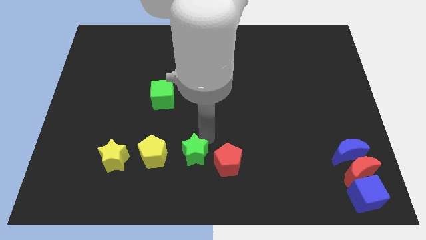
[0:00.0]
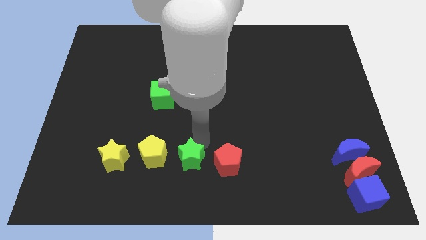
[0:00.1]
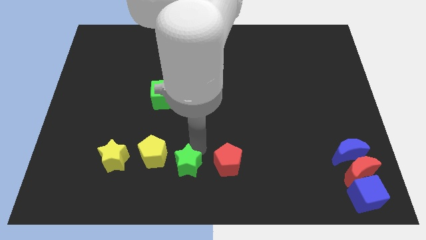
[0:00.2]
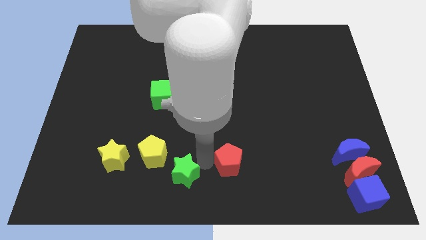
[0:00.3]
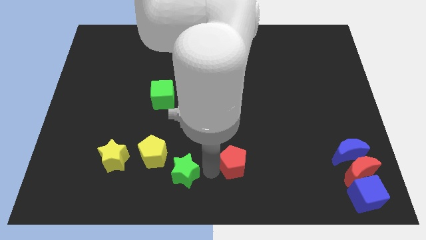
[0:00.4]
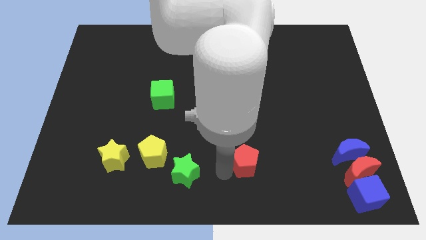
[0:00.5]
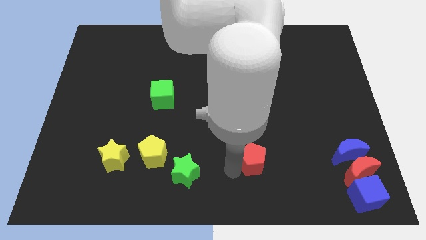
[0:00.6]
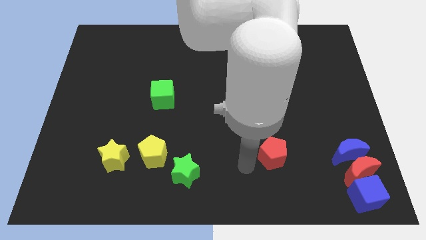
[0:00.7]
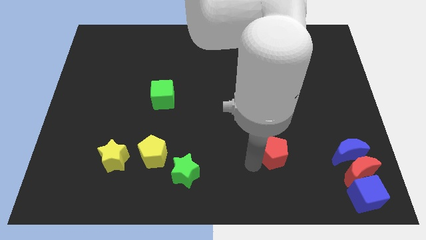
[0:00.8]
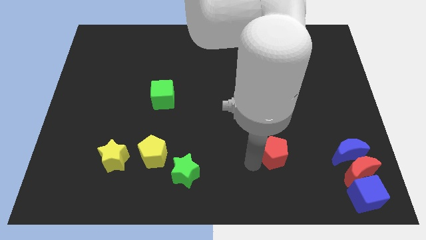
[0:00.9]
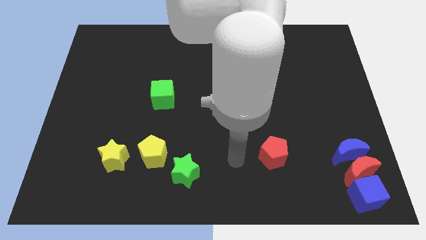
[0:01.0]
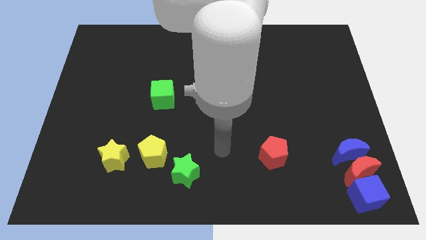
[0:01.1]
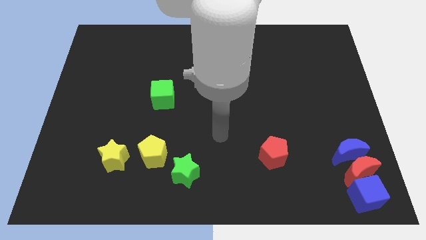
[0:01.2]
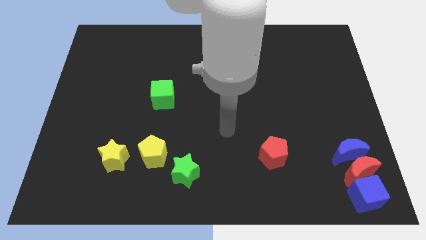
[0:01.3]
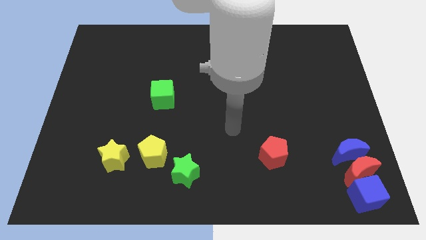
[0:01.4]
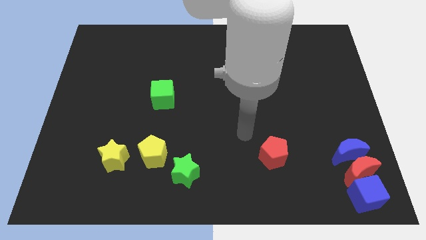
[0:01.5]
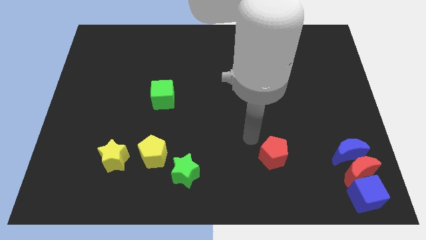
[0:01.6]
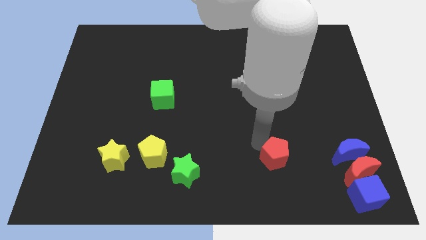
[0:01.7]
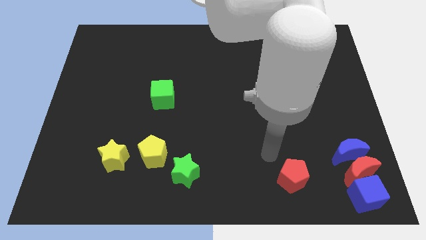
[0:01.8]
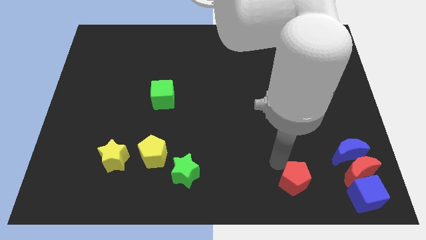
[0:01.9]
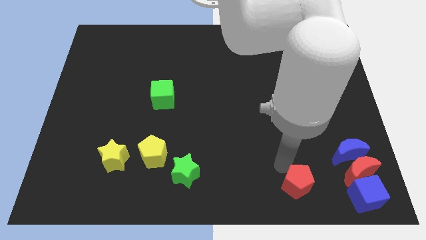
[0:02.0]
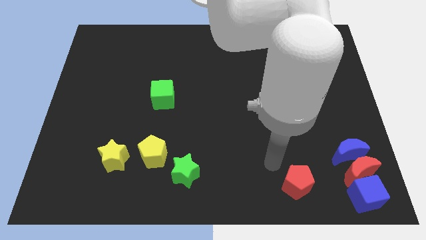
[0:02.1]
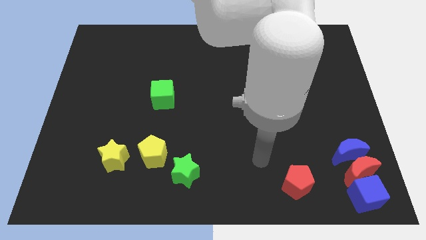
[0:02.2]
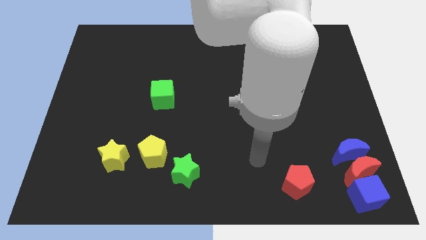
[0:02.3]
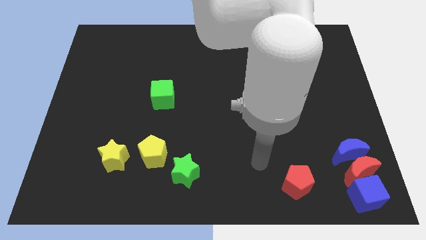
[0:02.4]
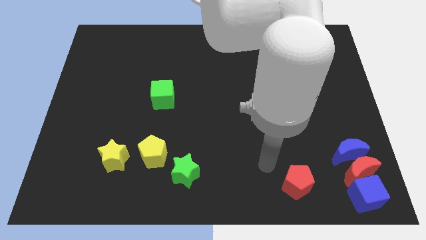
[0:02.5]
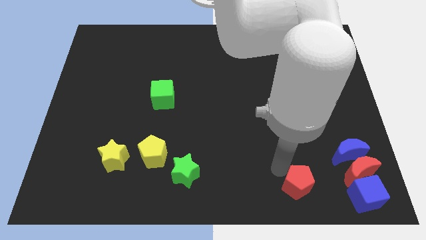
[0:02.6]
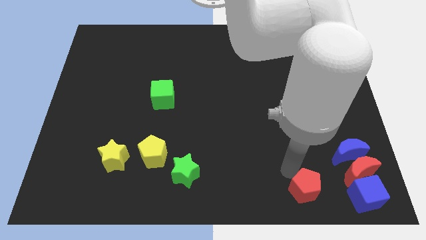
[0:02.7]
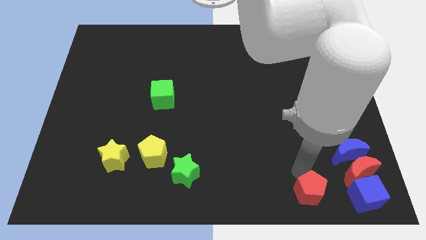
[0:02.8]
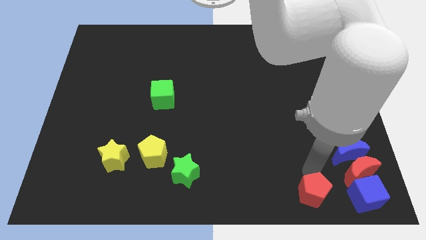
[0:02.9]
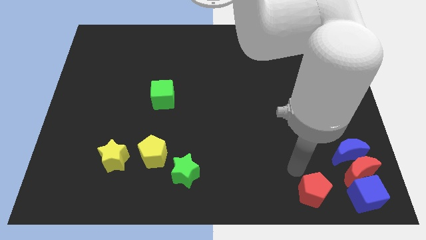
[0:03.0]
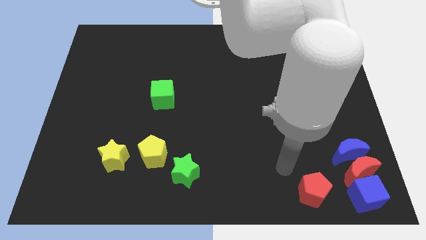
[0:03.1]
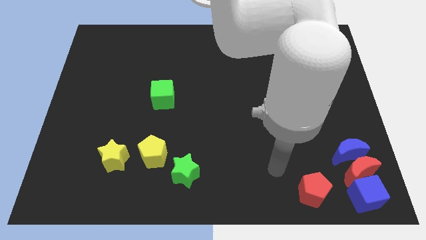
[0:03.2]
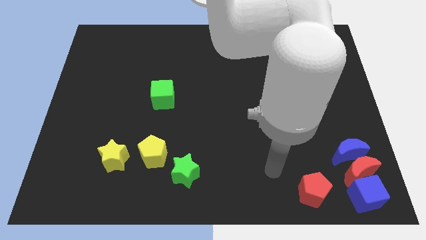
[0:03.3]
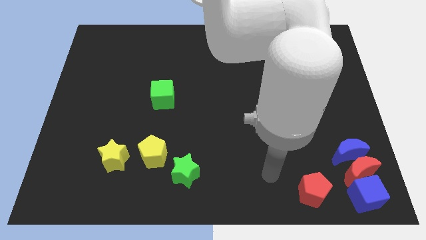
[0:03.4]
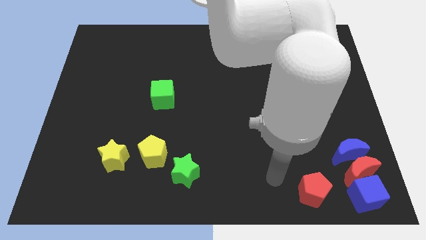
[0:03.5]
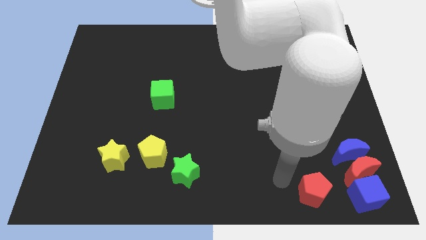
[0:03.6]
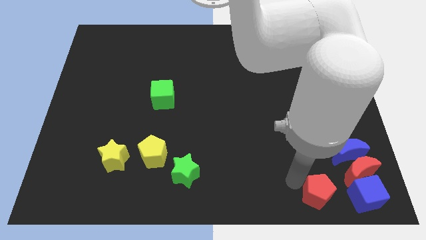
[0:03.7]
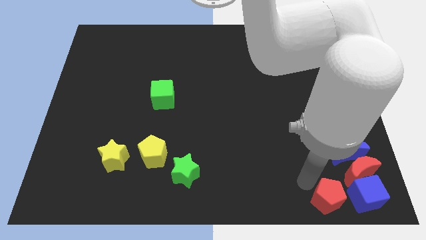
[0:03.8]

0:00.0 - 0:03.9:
push the red pentagon to the left of the blue cube

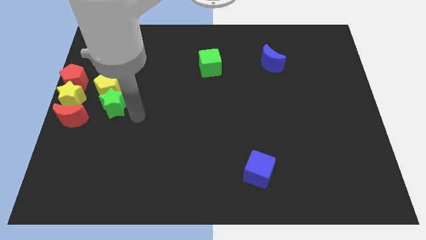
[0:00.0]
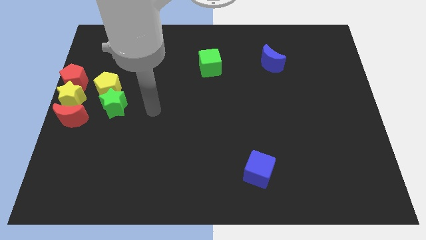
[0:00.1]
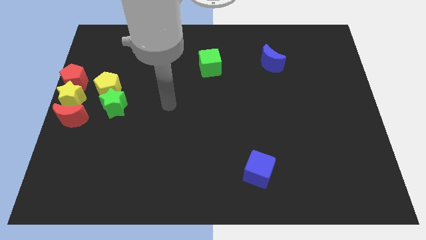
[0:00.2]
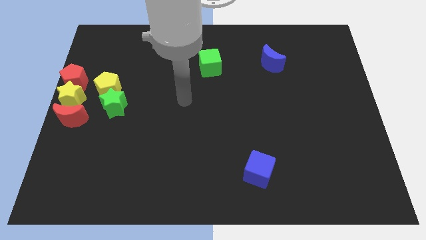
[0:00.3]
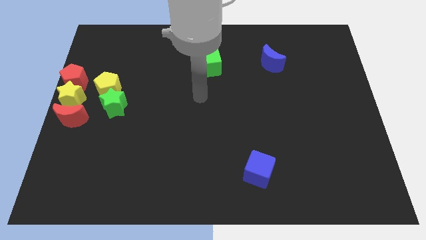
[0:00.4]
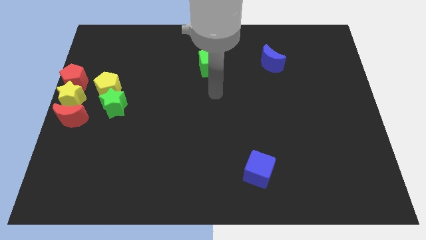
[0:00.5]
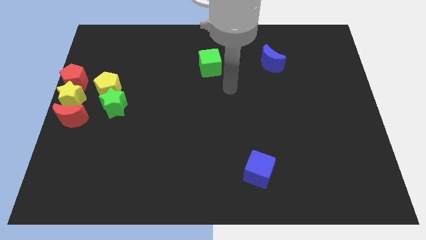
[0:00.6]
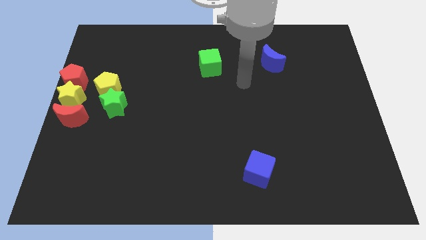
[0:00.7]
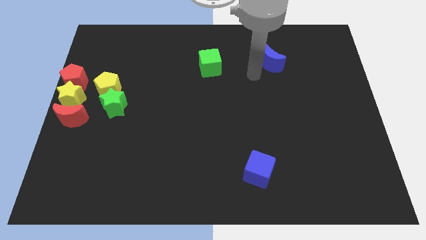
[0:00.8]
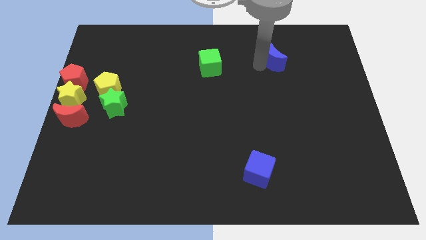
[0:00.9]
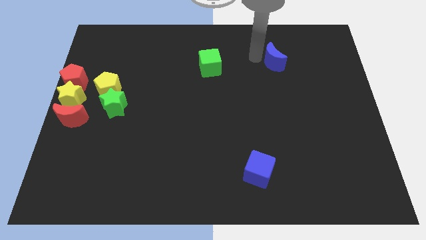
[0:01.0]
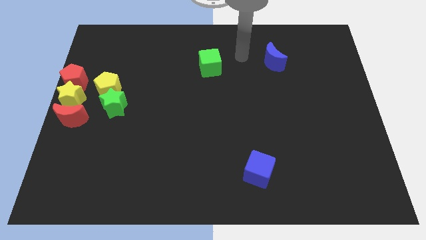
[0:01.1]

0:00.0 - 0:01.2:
move the arm to the left of the blue moon

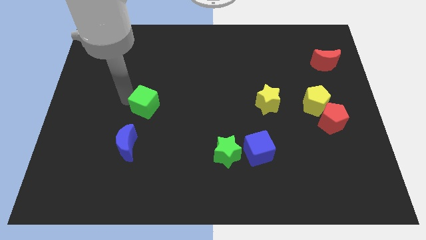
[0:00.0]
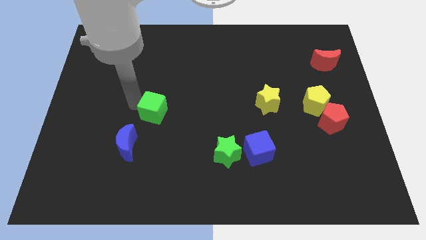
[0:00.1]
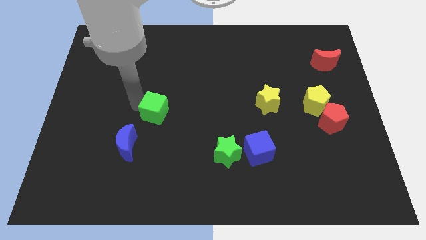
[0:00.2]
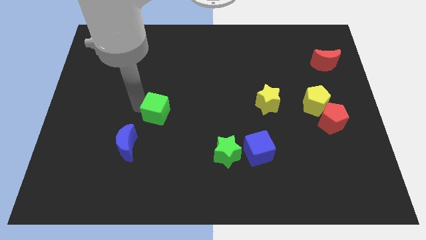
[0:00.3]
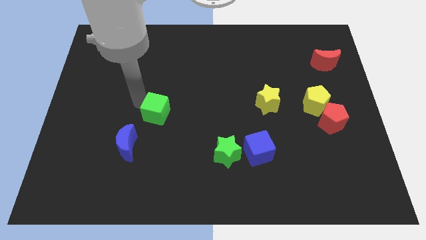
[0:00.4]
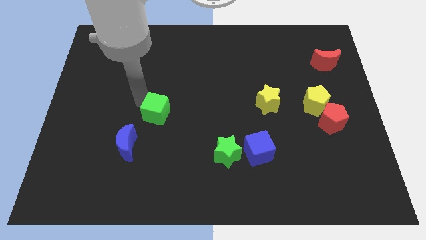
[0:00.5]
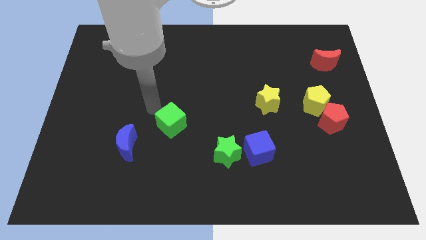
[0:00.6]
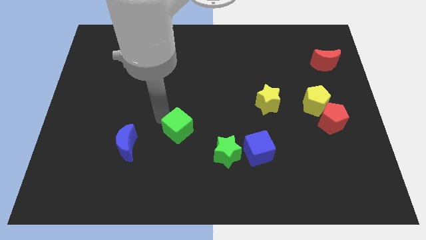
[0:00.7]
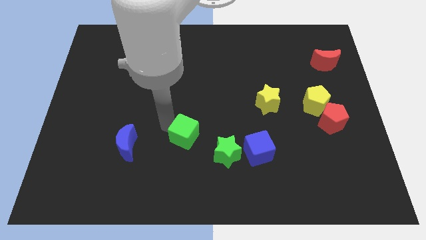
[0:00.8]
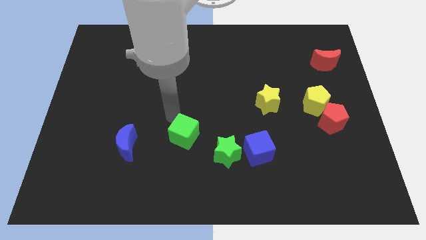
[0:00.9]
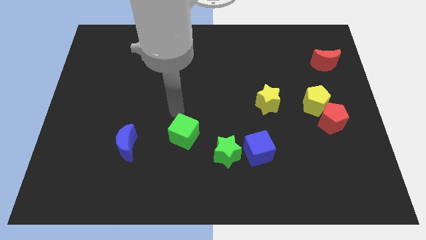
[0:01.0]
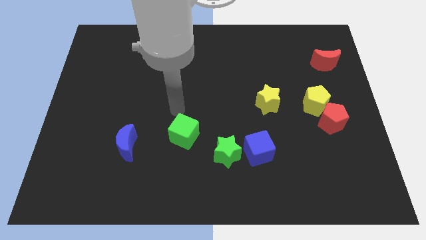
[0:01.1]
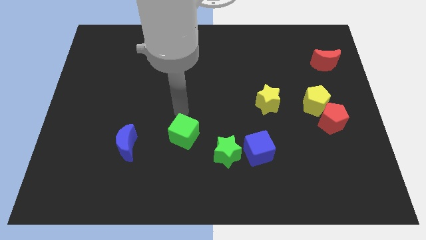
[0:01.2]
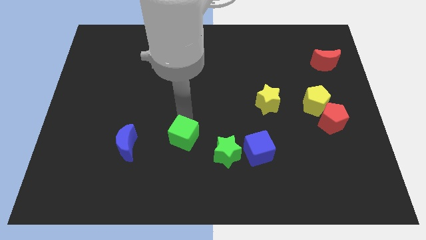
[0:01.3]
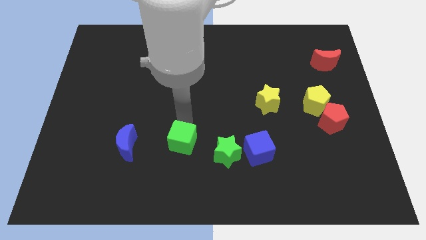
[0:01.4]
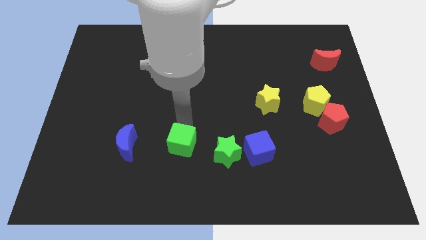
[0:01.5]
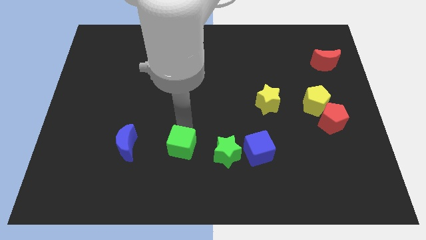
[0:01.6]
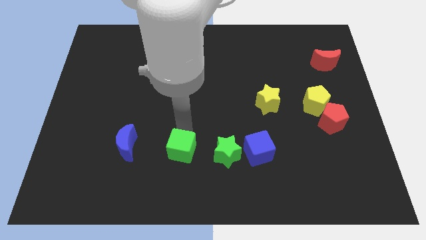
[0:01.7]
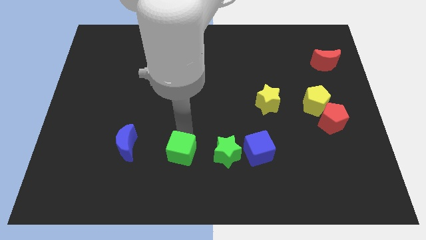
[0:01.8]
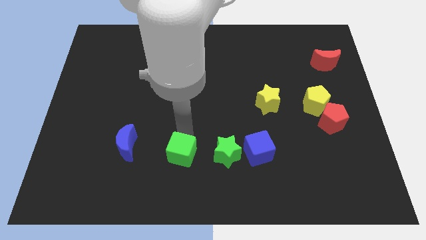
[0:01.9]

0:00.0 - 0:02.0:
place the green cube in between blue moon and blue cube

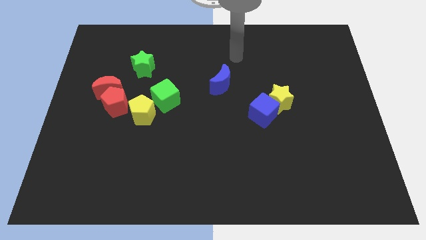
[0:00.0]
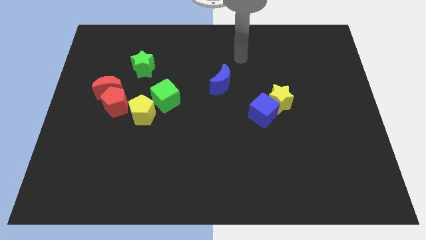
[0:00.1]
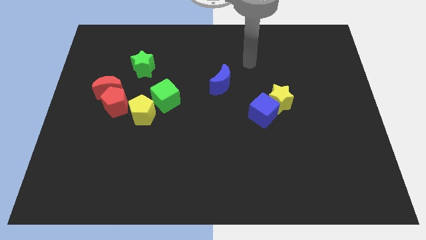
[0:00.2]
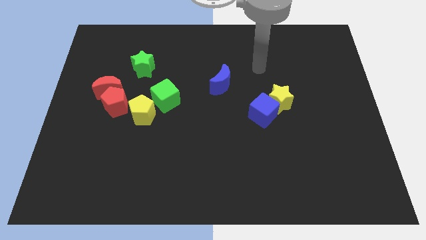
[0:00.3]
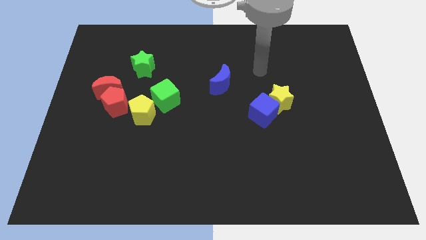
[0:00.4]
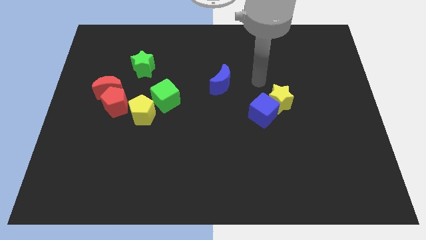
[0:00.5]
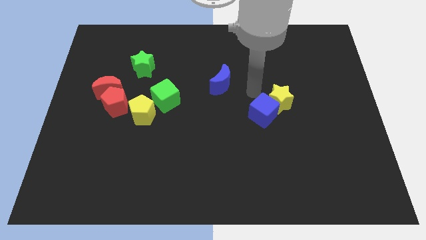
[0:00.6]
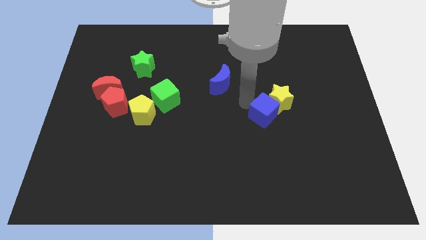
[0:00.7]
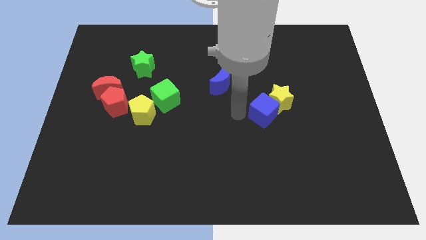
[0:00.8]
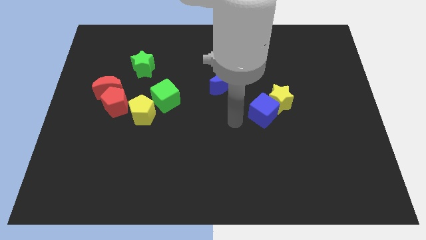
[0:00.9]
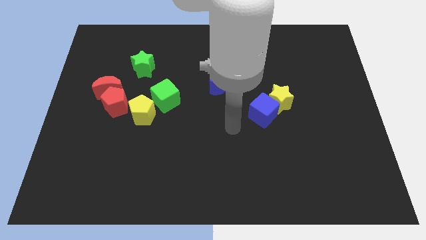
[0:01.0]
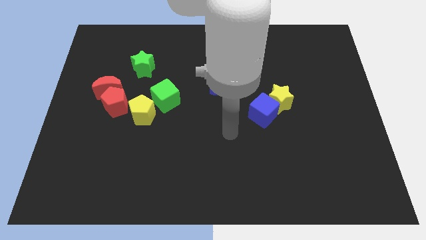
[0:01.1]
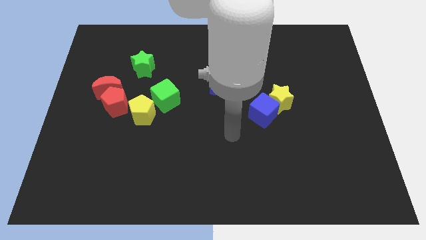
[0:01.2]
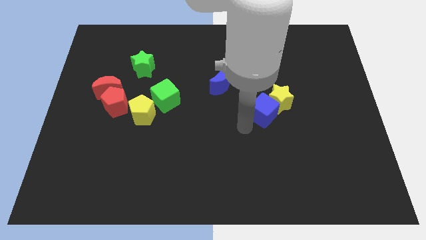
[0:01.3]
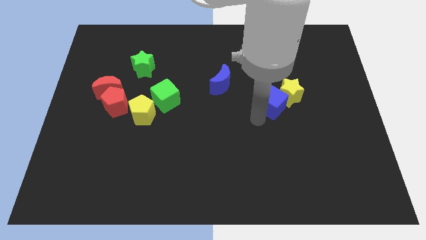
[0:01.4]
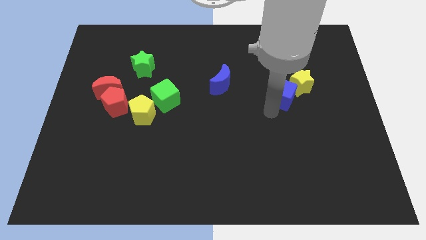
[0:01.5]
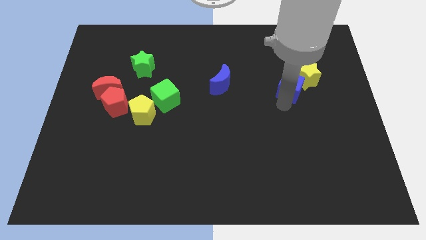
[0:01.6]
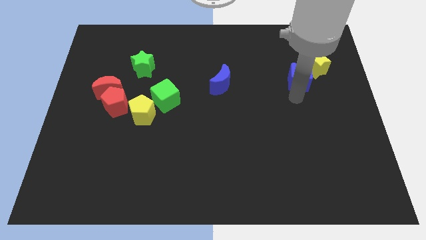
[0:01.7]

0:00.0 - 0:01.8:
move the blue cube and yellow star at the right side of the blue moon

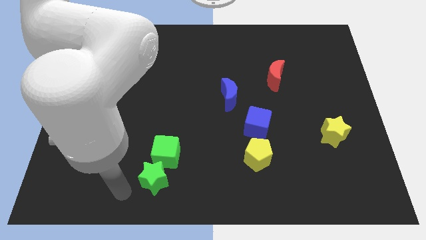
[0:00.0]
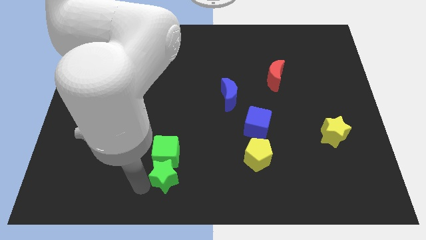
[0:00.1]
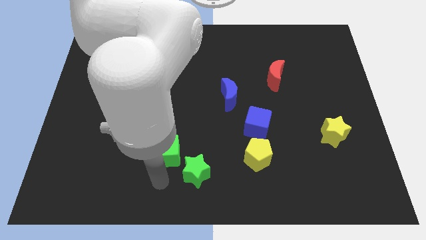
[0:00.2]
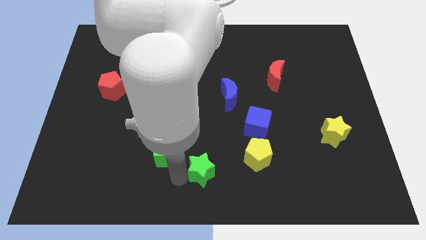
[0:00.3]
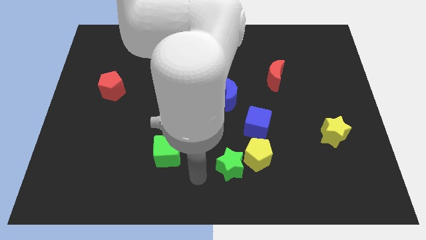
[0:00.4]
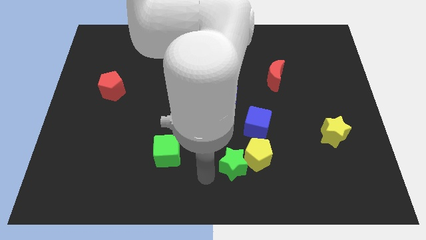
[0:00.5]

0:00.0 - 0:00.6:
move green star towards yellow pentagon
